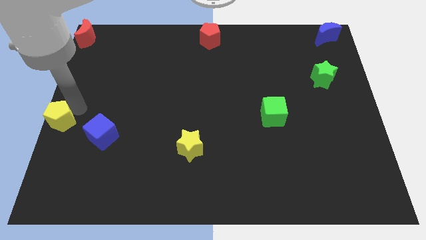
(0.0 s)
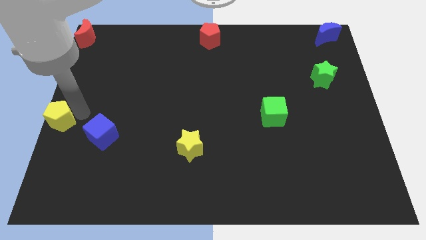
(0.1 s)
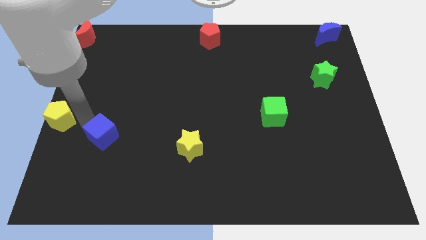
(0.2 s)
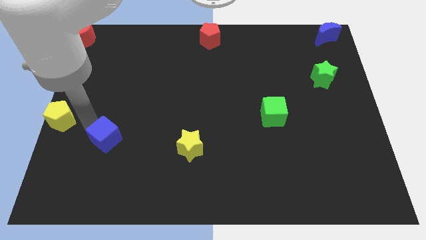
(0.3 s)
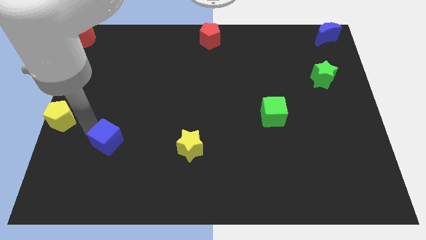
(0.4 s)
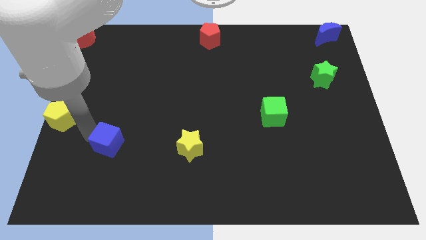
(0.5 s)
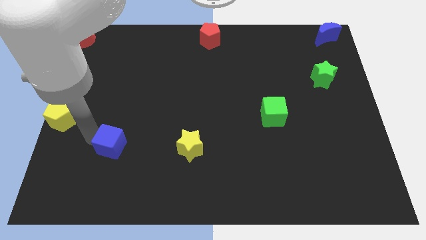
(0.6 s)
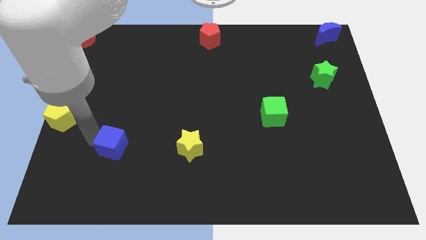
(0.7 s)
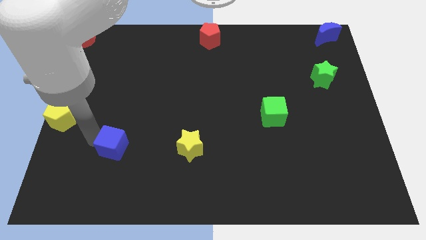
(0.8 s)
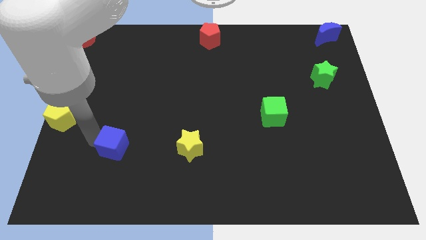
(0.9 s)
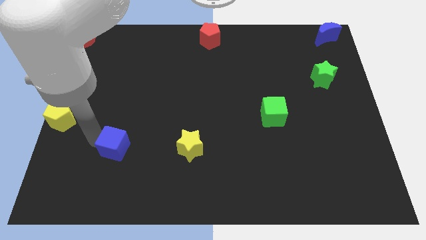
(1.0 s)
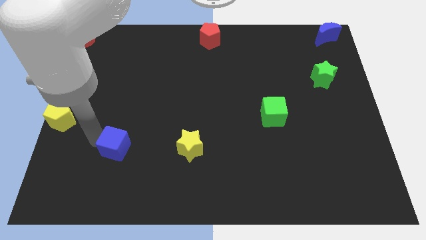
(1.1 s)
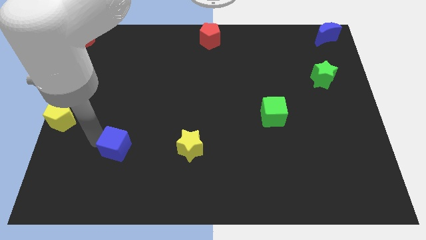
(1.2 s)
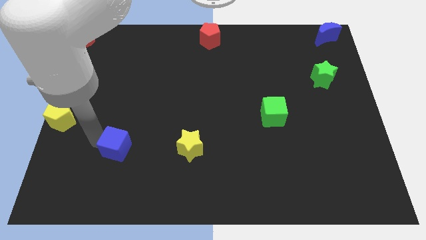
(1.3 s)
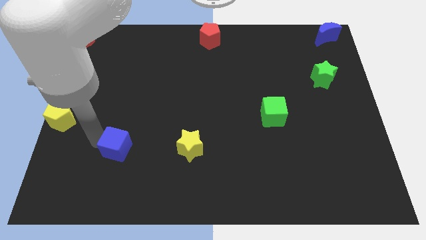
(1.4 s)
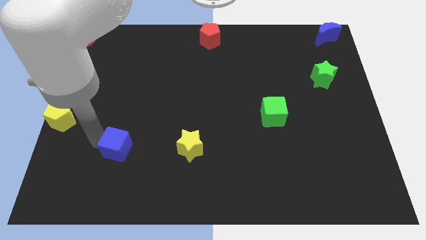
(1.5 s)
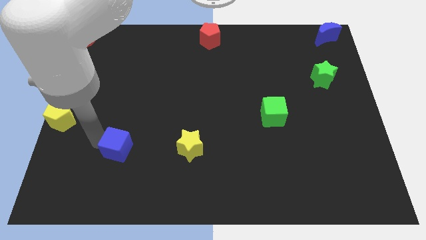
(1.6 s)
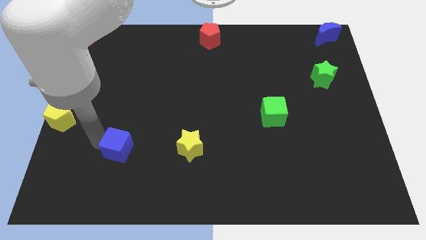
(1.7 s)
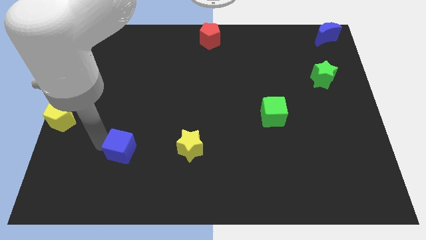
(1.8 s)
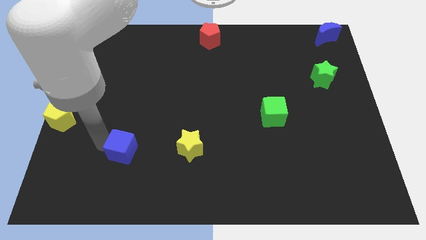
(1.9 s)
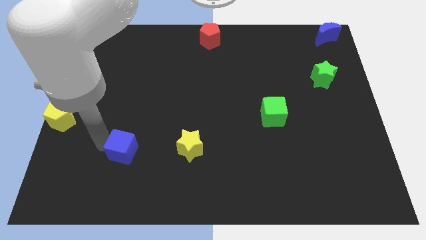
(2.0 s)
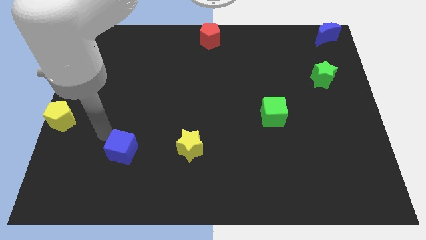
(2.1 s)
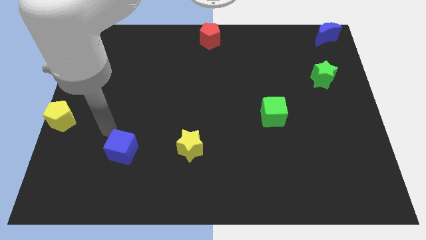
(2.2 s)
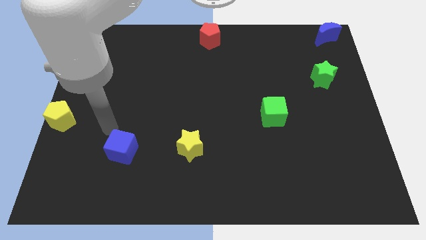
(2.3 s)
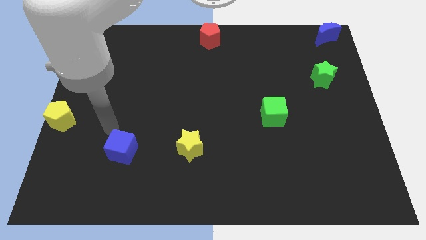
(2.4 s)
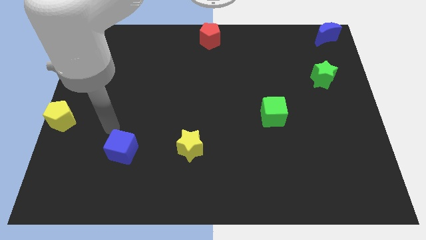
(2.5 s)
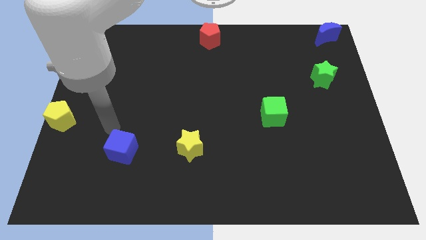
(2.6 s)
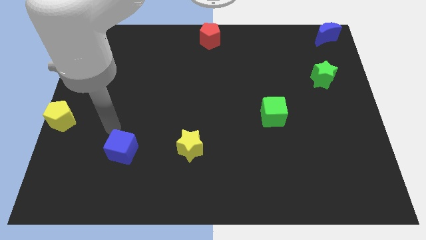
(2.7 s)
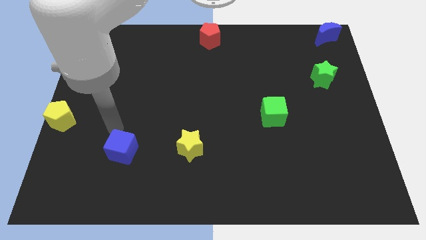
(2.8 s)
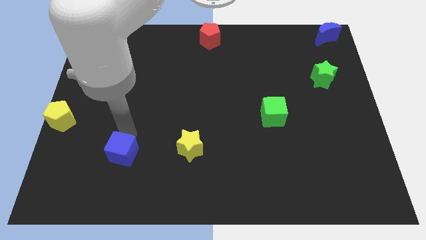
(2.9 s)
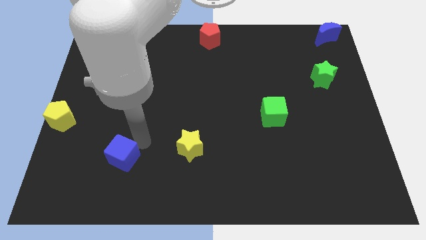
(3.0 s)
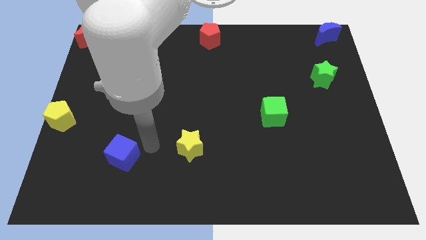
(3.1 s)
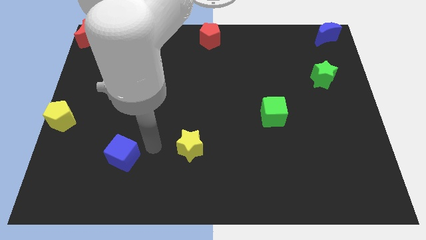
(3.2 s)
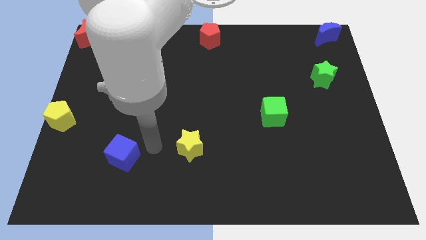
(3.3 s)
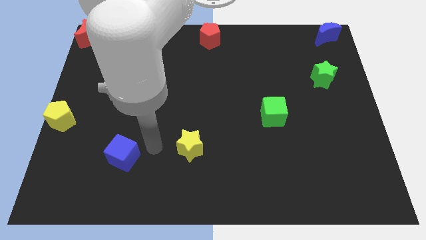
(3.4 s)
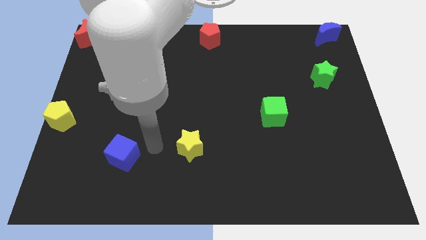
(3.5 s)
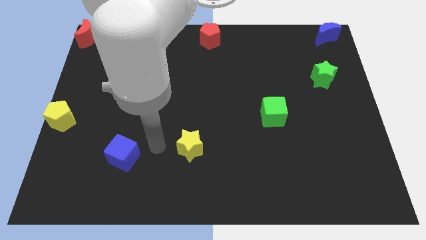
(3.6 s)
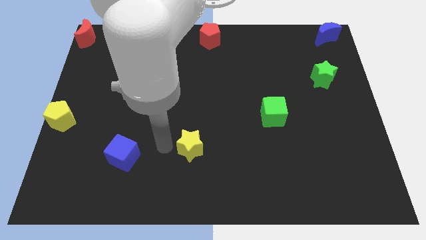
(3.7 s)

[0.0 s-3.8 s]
move the blue cube left to the yellow star

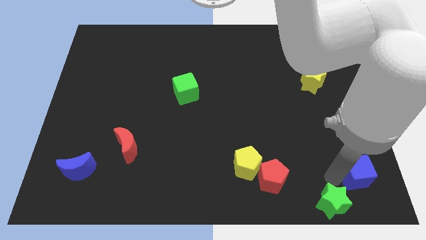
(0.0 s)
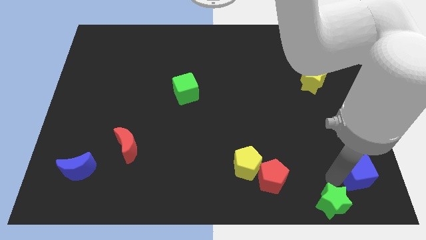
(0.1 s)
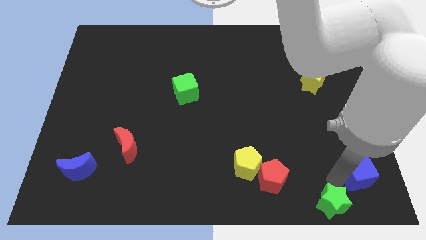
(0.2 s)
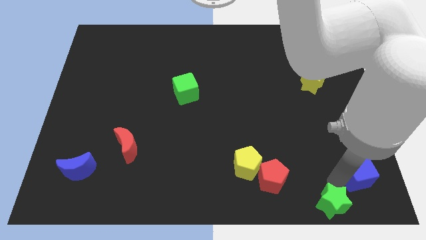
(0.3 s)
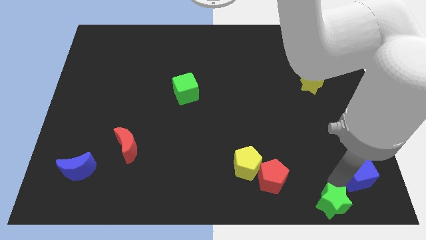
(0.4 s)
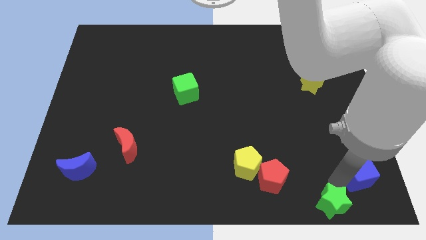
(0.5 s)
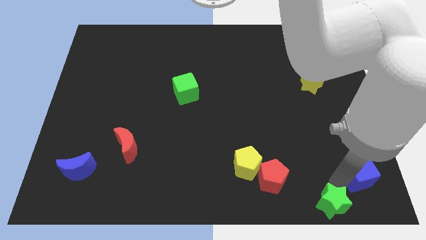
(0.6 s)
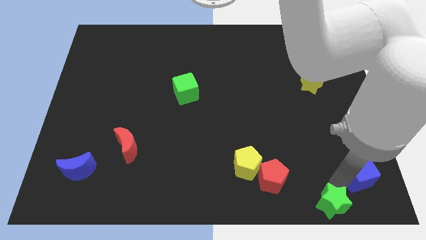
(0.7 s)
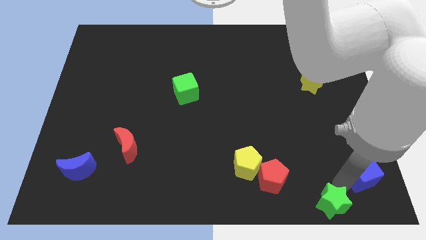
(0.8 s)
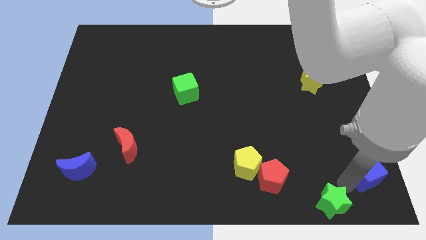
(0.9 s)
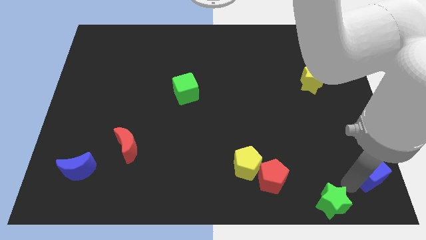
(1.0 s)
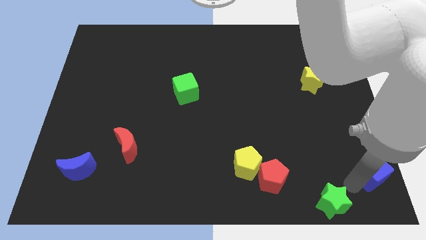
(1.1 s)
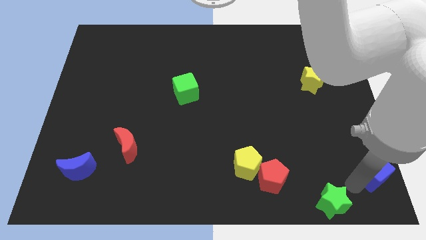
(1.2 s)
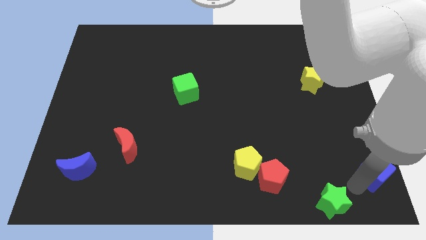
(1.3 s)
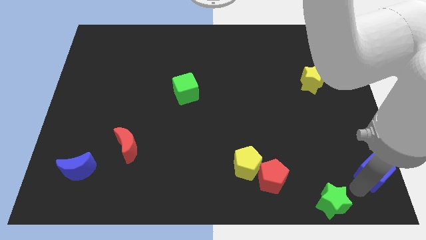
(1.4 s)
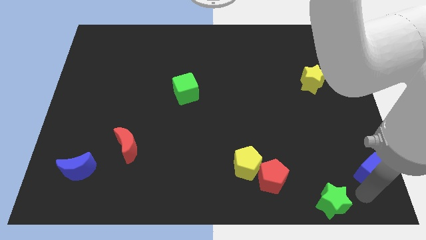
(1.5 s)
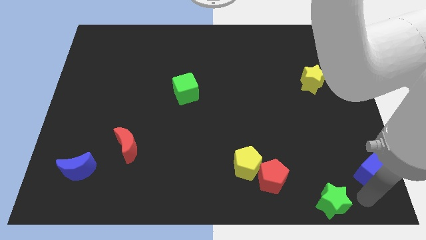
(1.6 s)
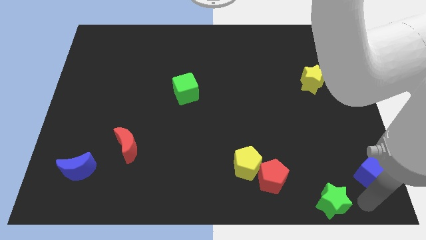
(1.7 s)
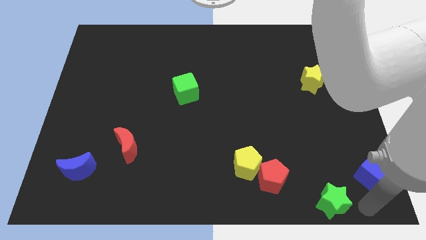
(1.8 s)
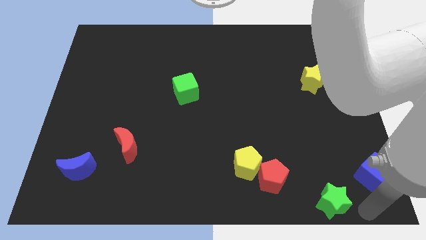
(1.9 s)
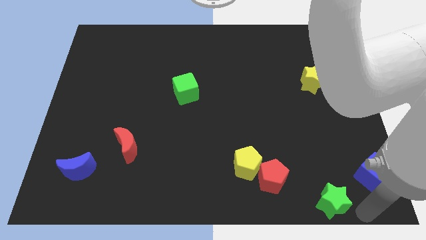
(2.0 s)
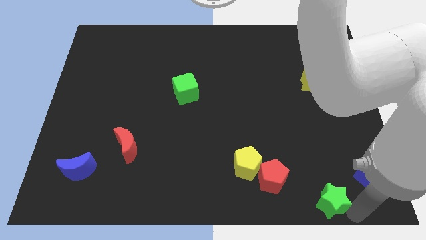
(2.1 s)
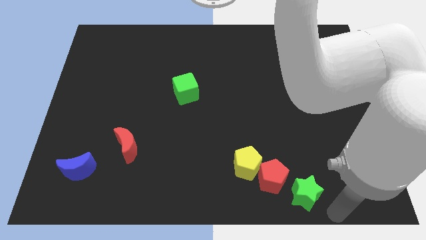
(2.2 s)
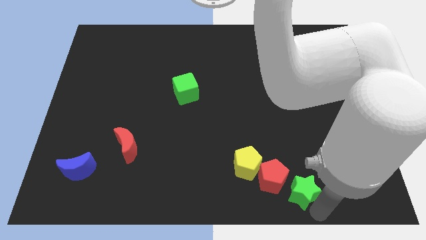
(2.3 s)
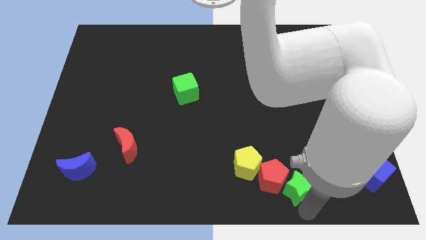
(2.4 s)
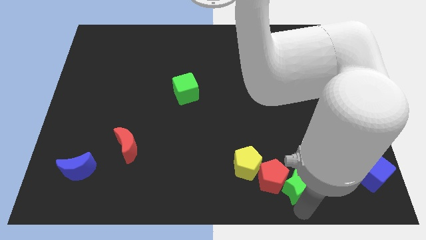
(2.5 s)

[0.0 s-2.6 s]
push green star towards red pentagon

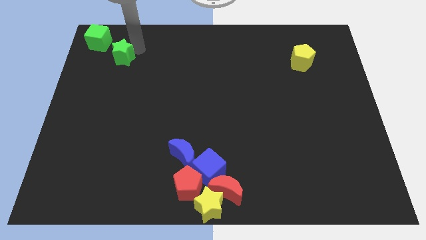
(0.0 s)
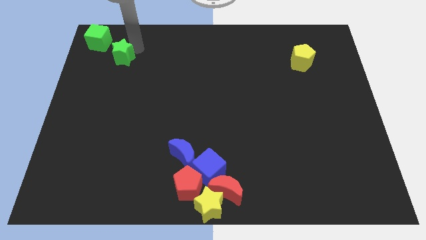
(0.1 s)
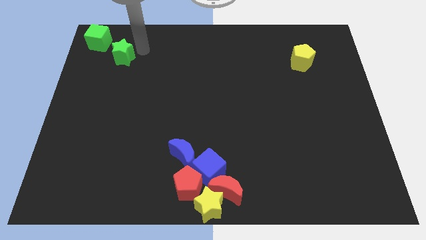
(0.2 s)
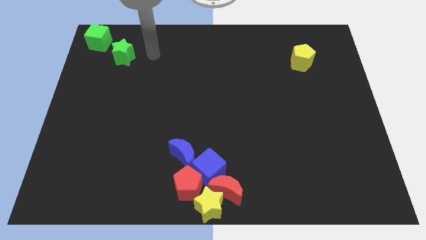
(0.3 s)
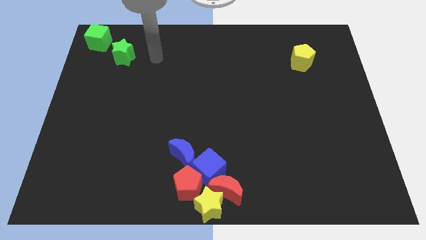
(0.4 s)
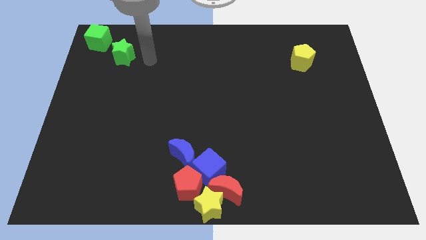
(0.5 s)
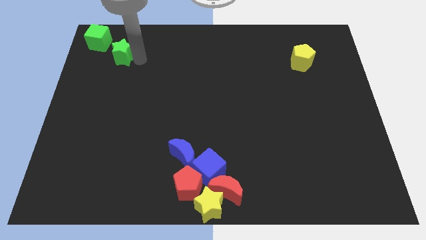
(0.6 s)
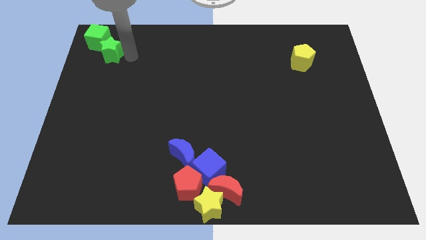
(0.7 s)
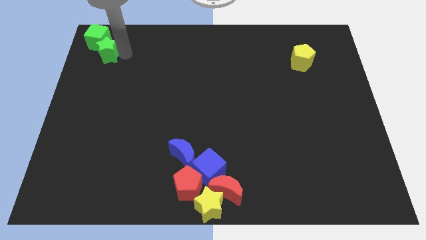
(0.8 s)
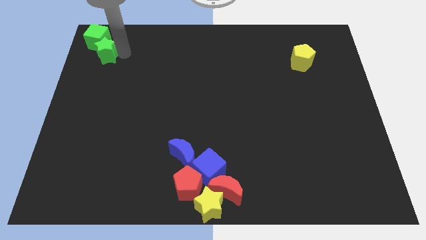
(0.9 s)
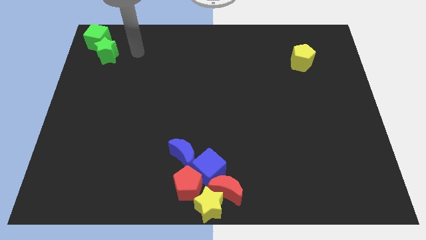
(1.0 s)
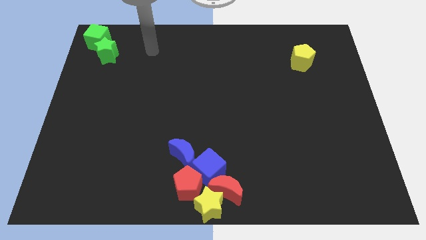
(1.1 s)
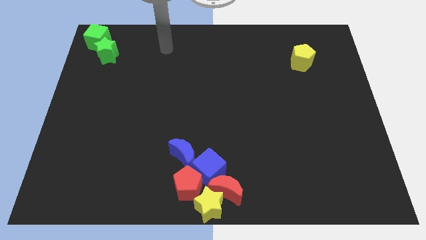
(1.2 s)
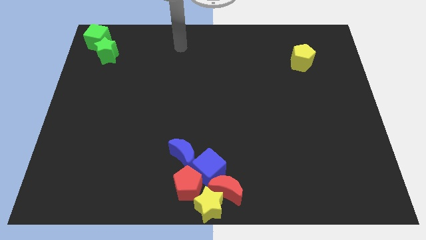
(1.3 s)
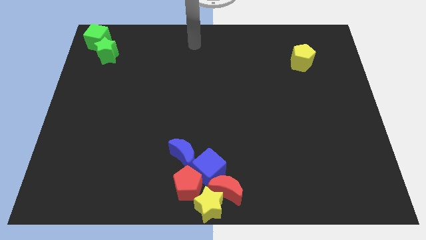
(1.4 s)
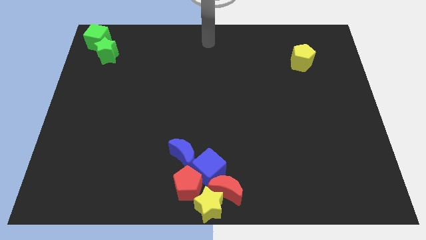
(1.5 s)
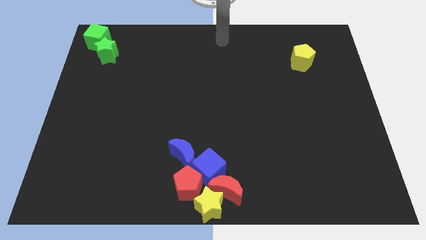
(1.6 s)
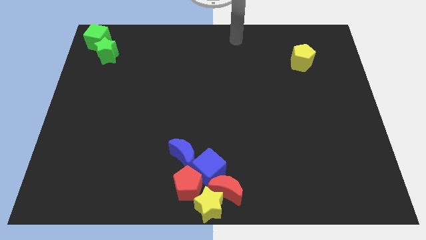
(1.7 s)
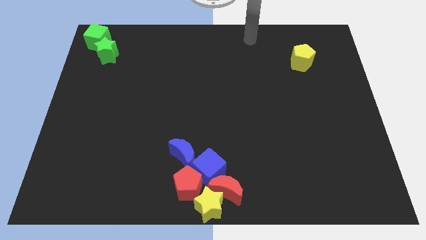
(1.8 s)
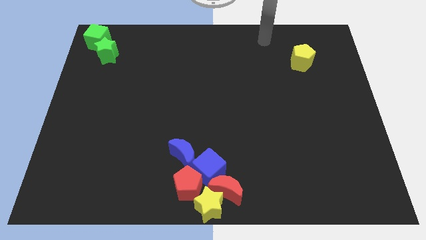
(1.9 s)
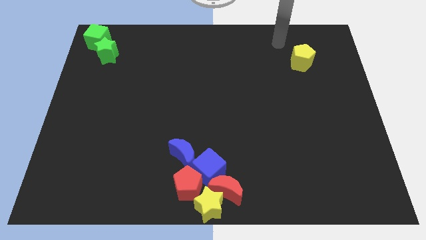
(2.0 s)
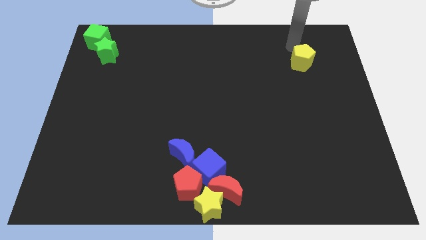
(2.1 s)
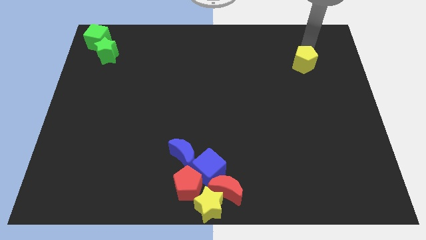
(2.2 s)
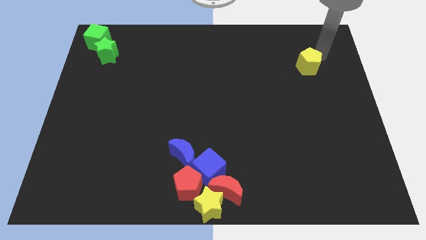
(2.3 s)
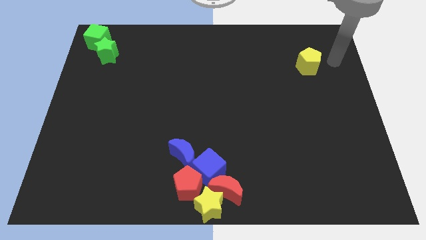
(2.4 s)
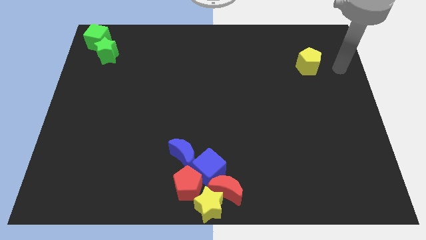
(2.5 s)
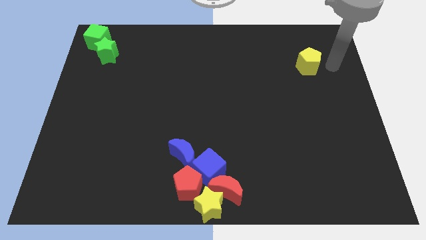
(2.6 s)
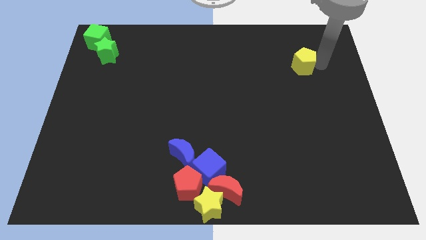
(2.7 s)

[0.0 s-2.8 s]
move your arm towards the yellow pentagon
